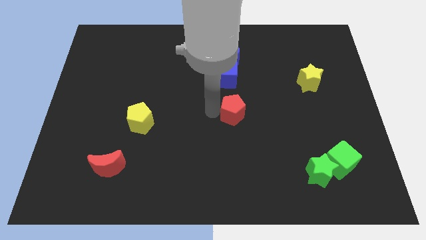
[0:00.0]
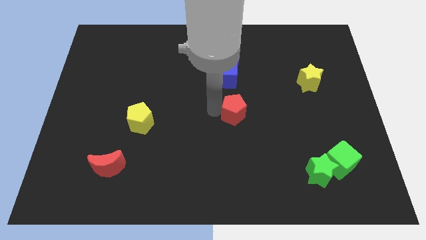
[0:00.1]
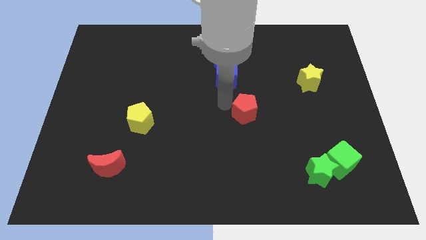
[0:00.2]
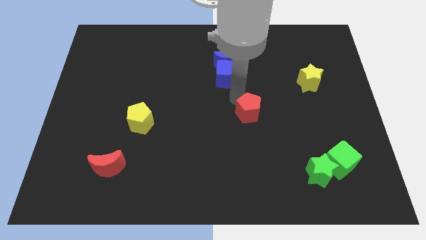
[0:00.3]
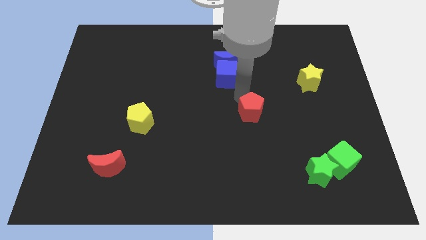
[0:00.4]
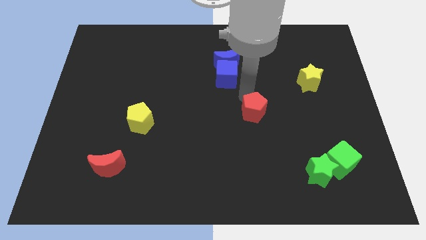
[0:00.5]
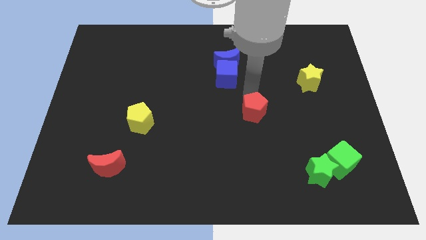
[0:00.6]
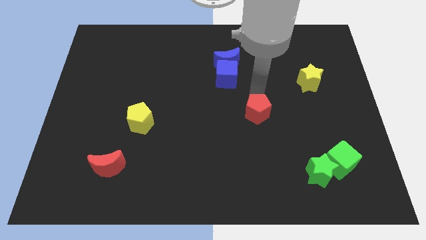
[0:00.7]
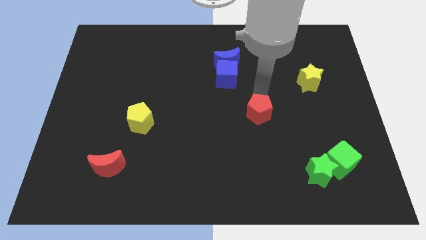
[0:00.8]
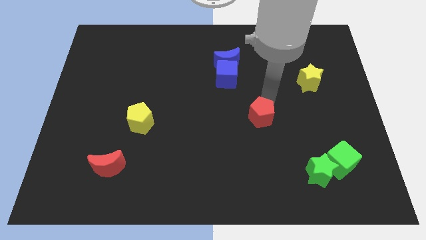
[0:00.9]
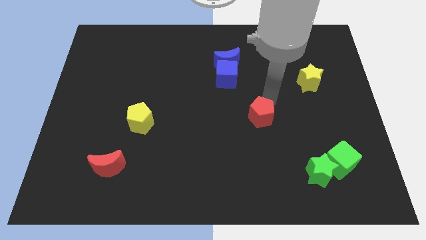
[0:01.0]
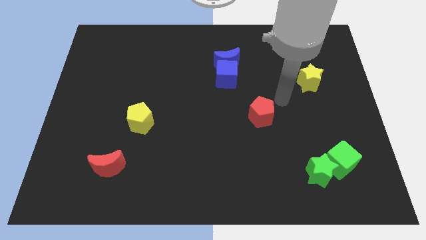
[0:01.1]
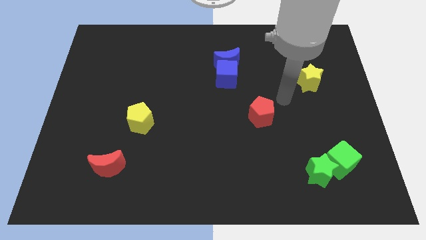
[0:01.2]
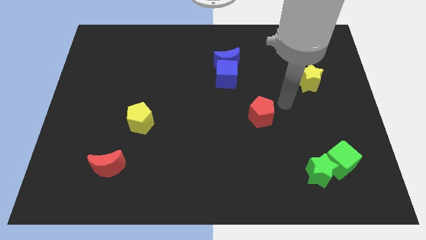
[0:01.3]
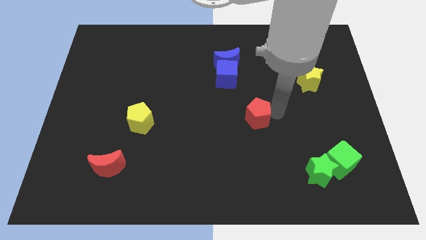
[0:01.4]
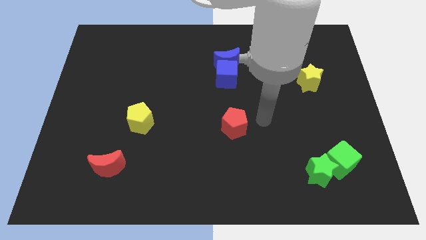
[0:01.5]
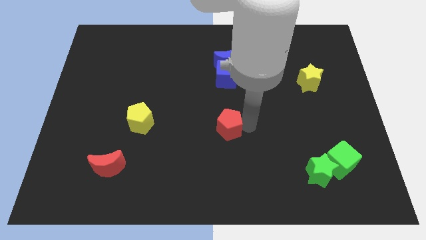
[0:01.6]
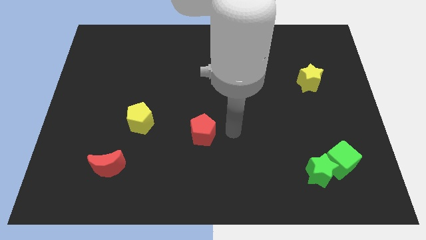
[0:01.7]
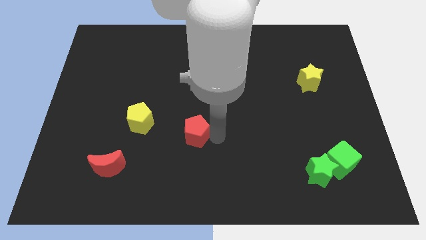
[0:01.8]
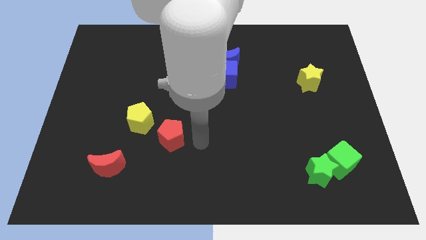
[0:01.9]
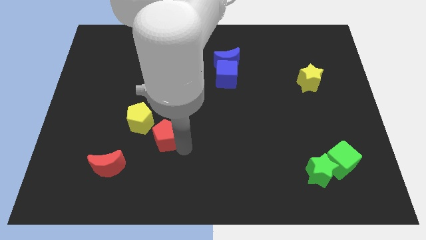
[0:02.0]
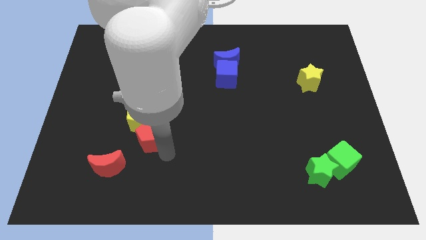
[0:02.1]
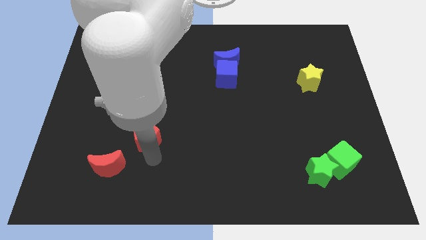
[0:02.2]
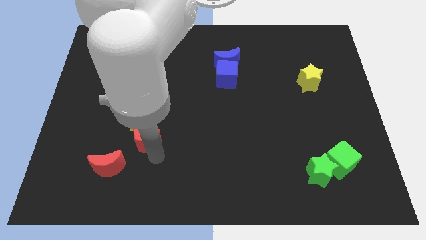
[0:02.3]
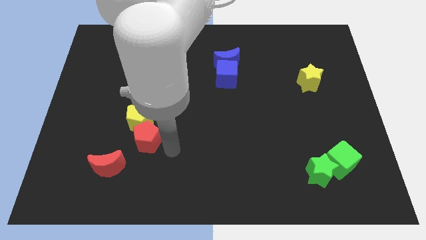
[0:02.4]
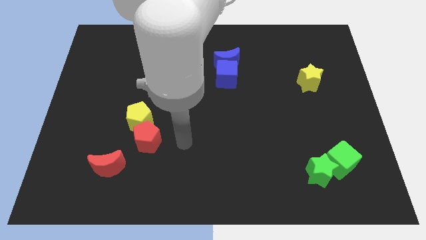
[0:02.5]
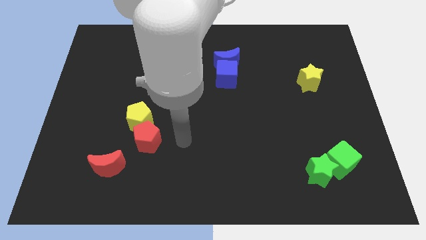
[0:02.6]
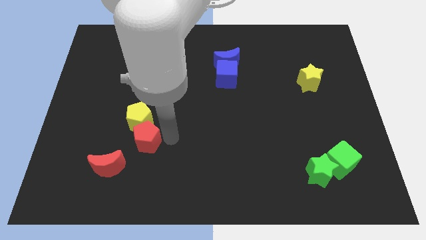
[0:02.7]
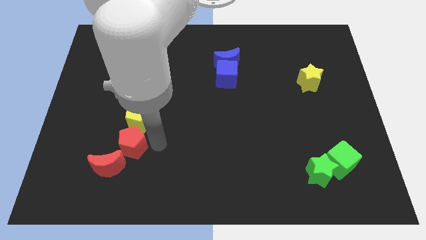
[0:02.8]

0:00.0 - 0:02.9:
place the red penatgon below the yellow pentagon

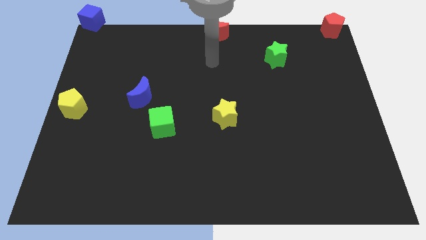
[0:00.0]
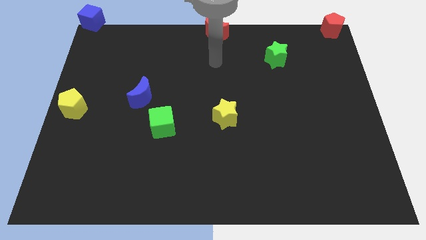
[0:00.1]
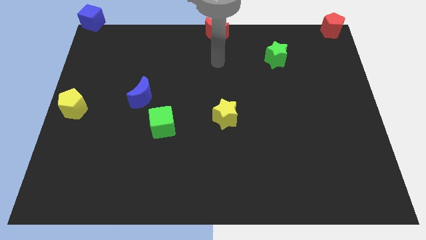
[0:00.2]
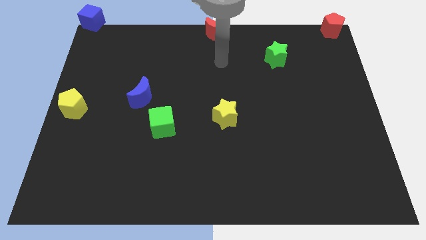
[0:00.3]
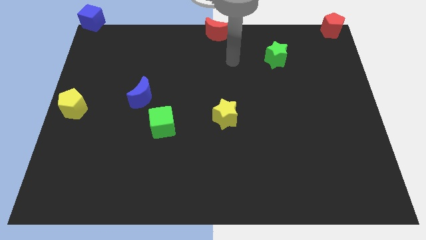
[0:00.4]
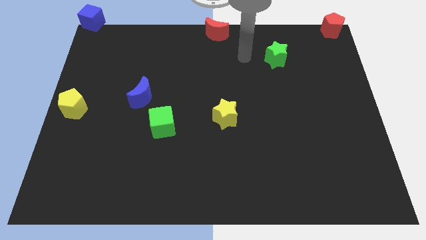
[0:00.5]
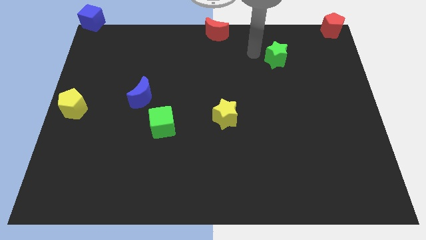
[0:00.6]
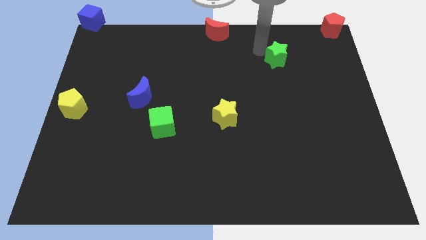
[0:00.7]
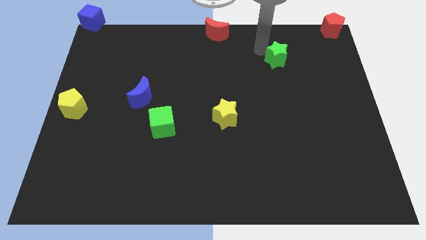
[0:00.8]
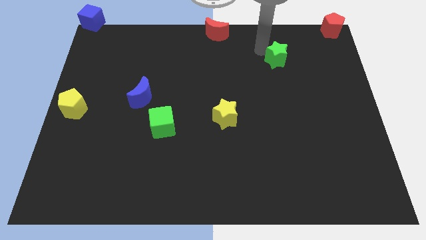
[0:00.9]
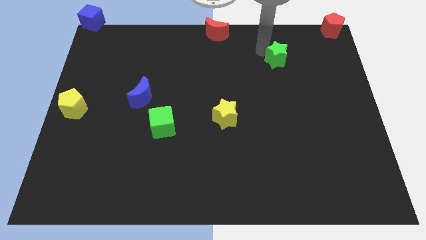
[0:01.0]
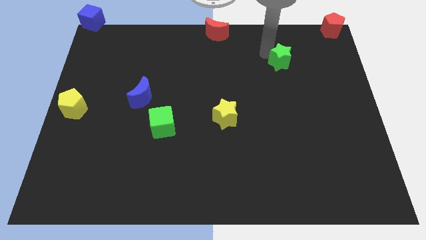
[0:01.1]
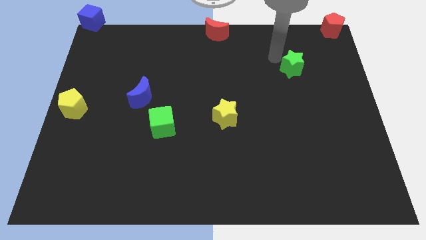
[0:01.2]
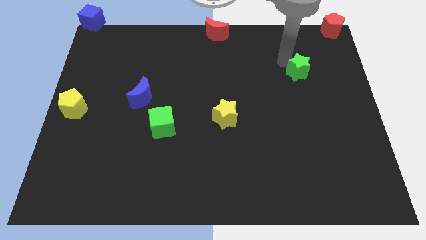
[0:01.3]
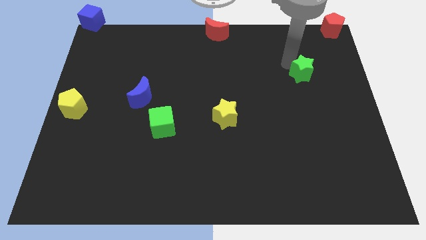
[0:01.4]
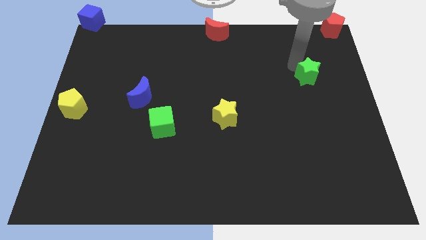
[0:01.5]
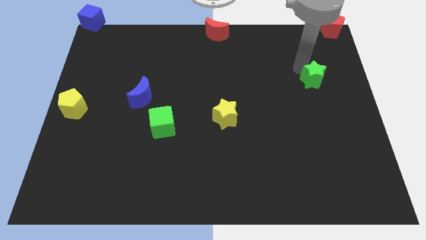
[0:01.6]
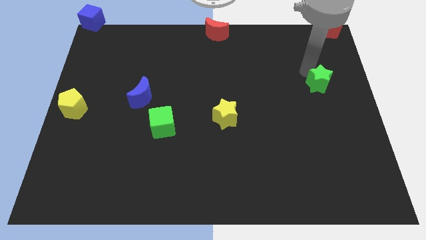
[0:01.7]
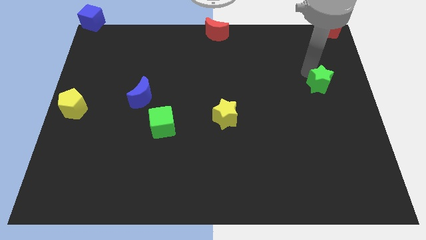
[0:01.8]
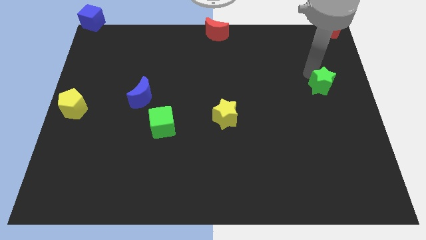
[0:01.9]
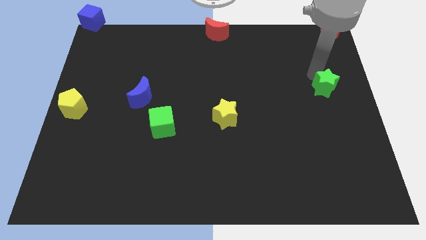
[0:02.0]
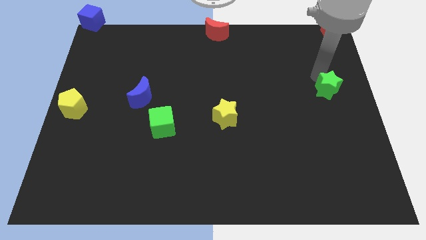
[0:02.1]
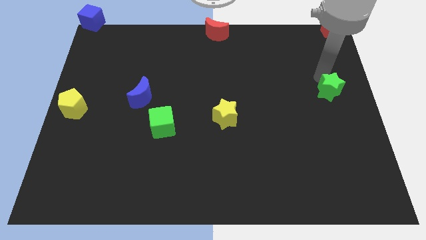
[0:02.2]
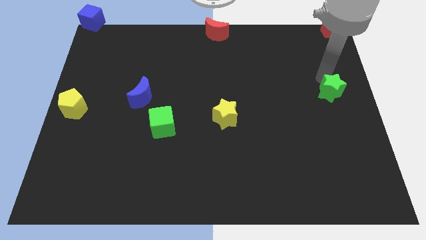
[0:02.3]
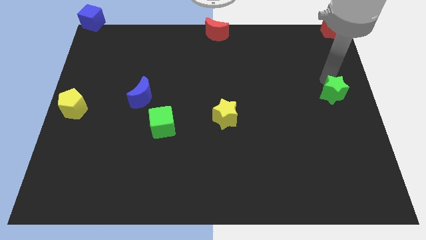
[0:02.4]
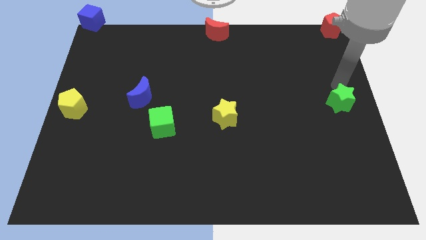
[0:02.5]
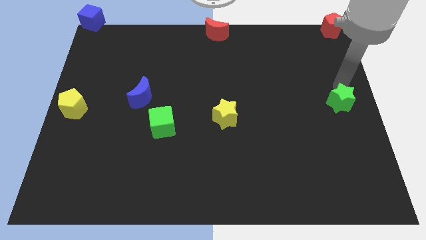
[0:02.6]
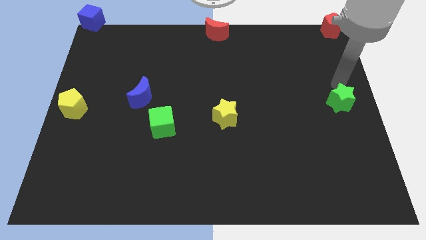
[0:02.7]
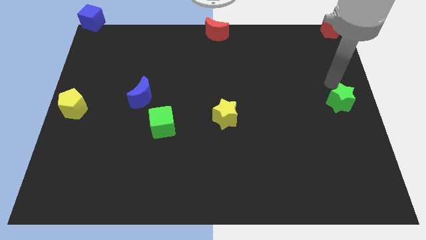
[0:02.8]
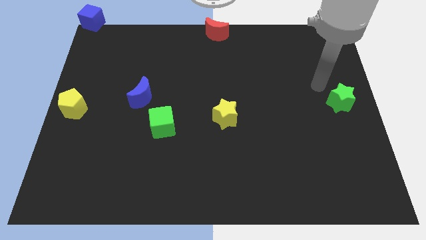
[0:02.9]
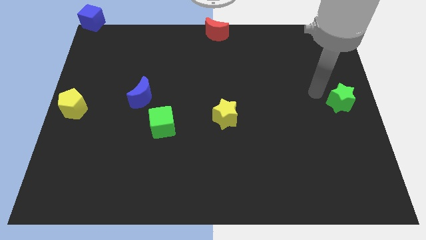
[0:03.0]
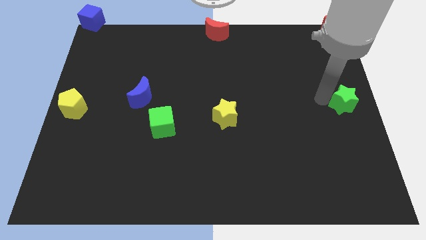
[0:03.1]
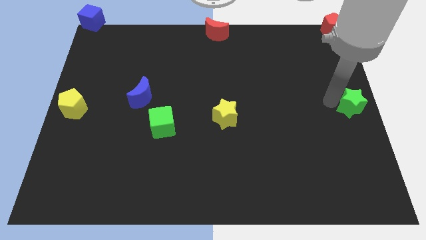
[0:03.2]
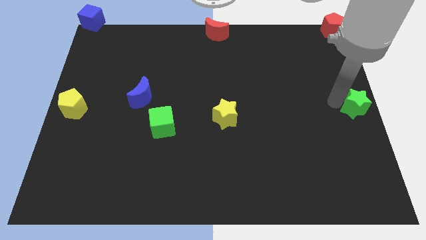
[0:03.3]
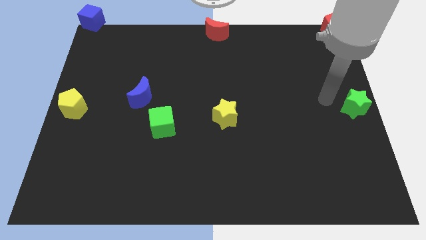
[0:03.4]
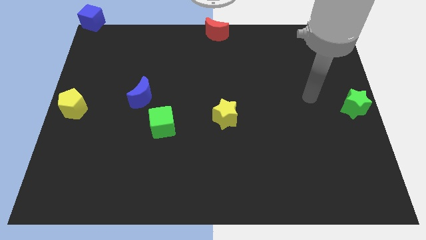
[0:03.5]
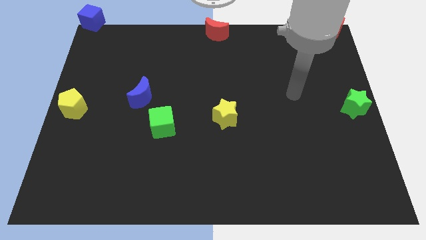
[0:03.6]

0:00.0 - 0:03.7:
move the green star to the center right of the board

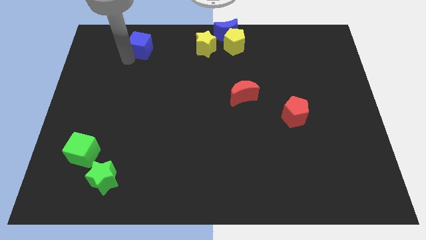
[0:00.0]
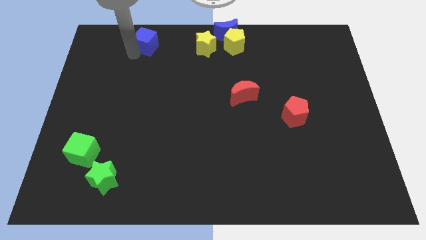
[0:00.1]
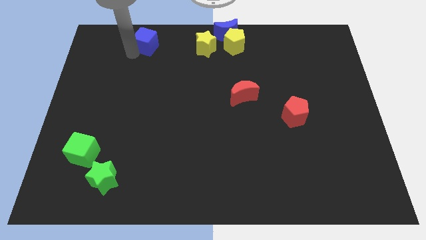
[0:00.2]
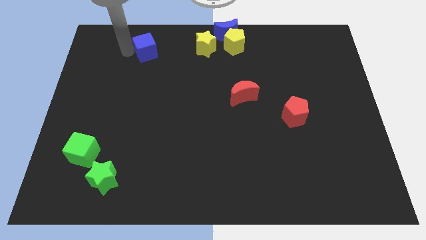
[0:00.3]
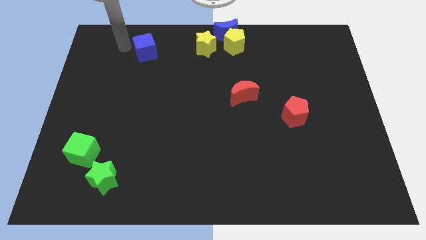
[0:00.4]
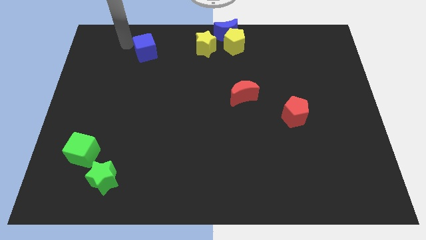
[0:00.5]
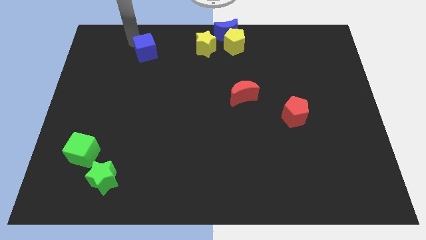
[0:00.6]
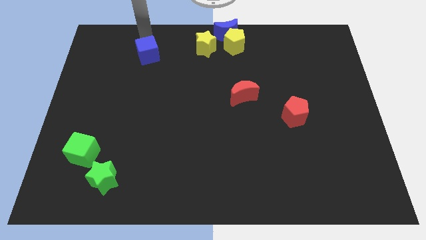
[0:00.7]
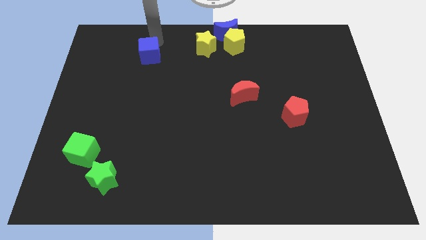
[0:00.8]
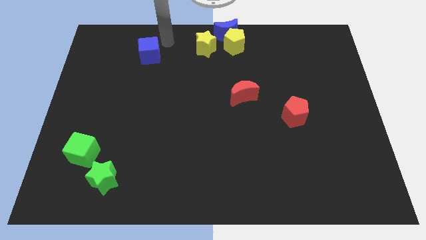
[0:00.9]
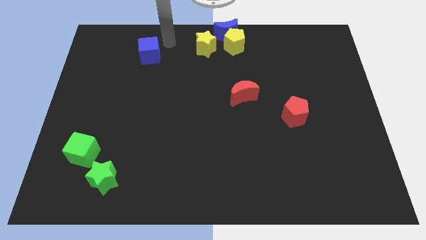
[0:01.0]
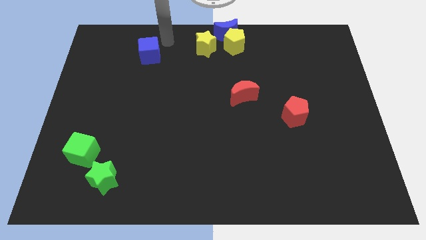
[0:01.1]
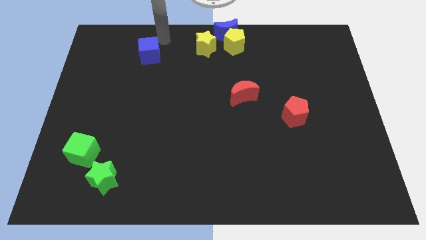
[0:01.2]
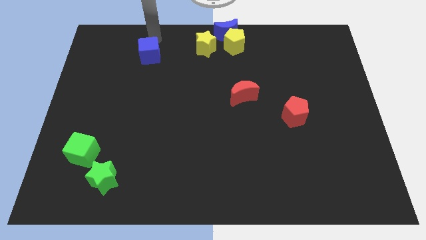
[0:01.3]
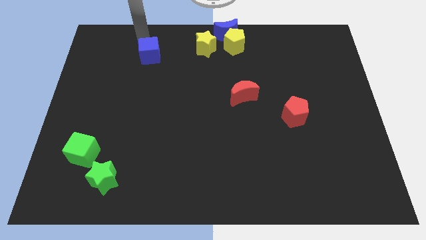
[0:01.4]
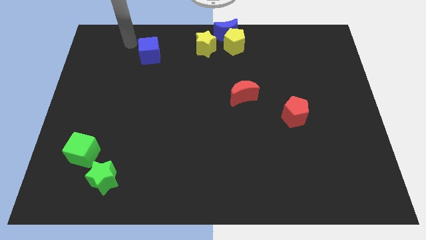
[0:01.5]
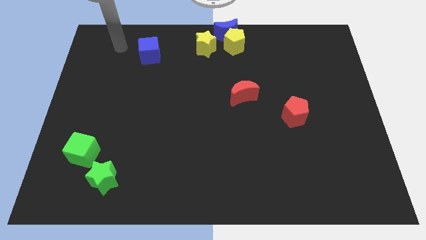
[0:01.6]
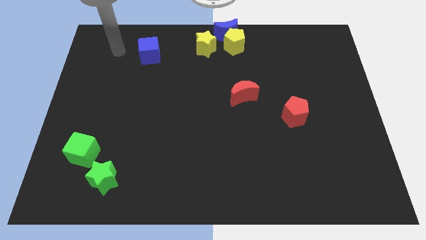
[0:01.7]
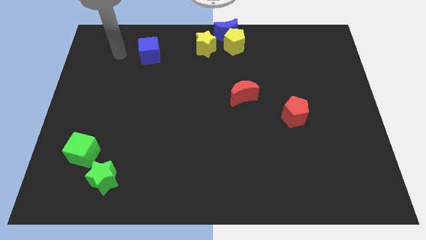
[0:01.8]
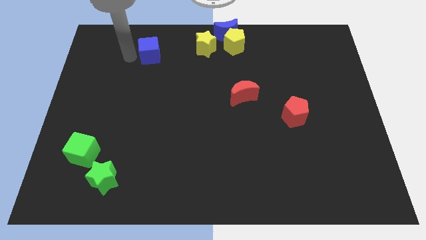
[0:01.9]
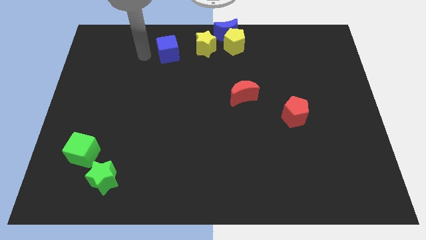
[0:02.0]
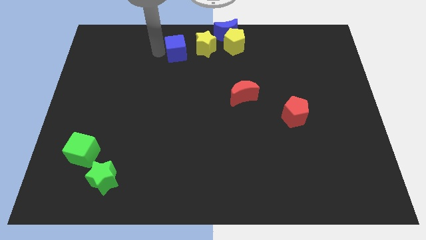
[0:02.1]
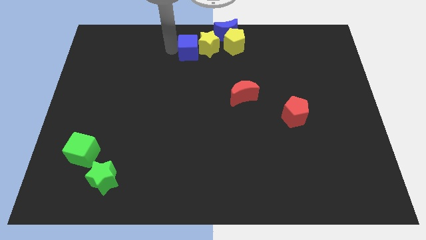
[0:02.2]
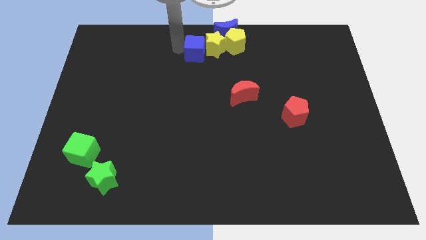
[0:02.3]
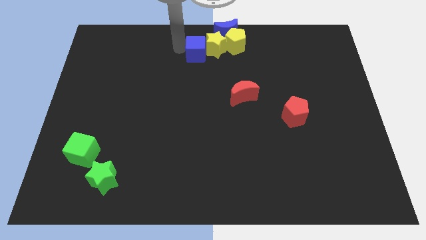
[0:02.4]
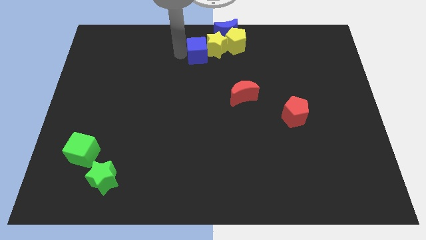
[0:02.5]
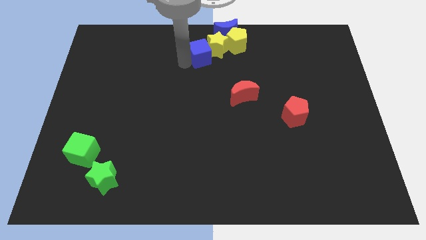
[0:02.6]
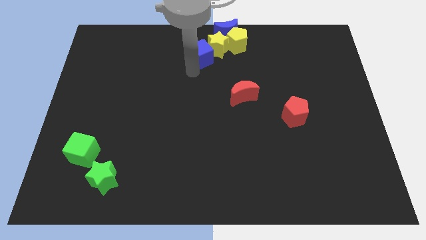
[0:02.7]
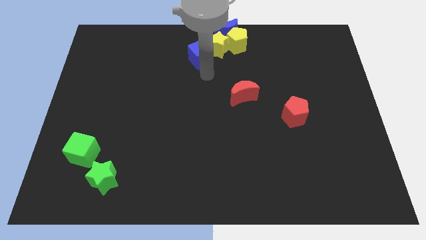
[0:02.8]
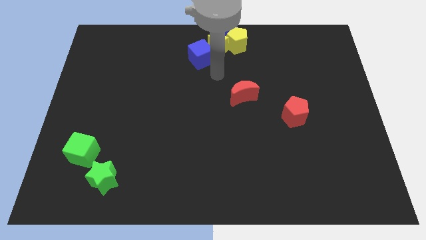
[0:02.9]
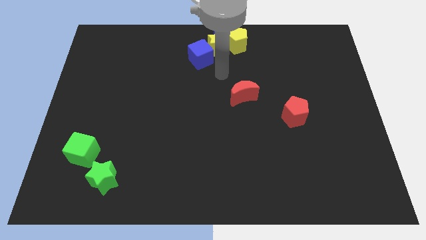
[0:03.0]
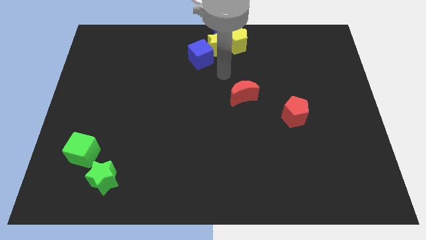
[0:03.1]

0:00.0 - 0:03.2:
push the blue cube into yellow star
